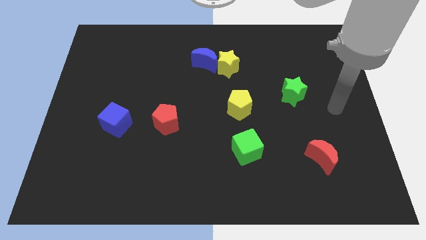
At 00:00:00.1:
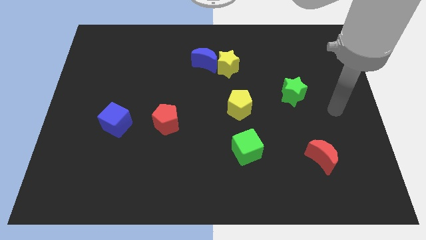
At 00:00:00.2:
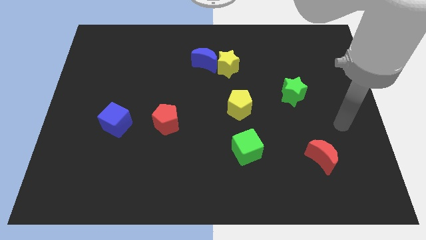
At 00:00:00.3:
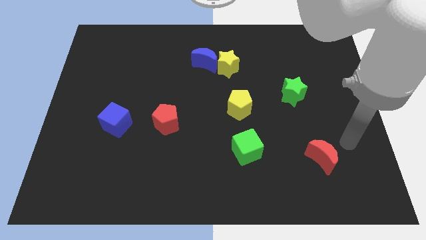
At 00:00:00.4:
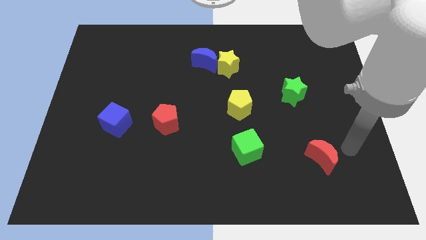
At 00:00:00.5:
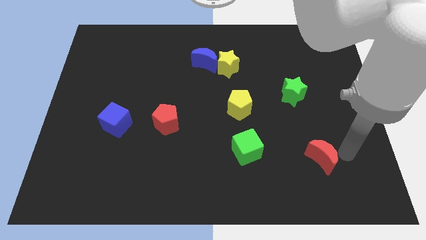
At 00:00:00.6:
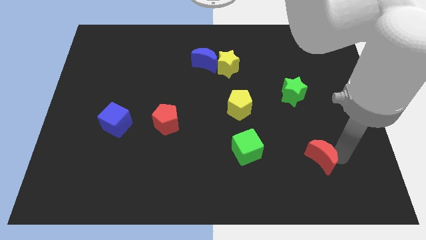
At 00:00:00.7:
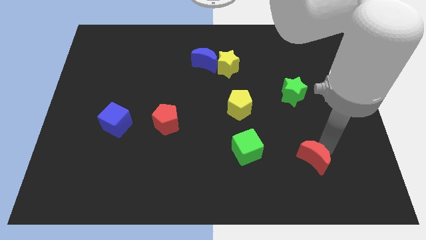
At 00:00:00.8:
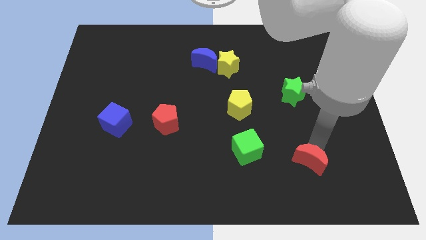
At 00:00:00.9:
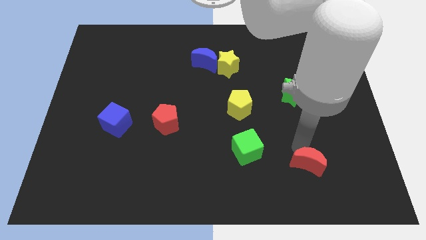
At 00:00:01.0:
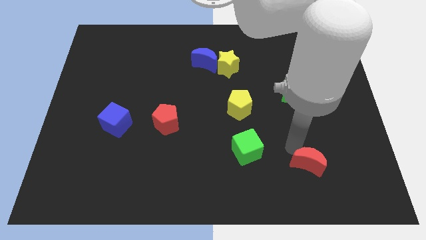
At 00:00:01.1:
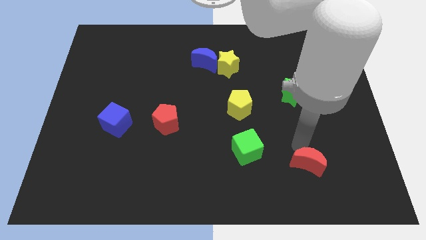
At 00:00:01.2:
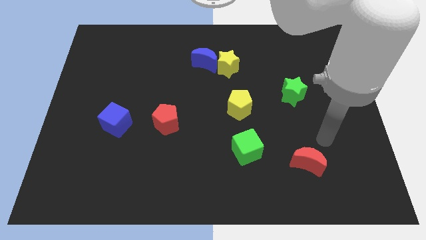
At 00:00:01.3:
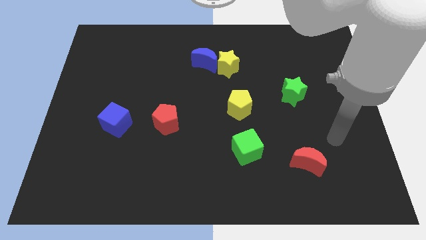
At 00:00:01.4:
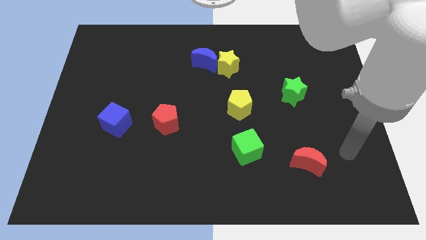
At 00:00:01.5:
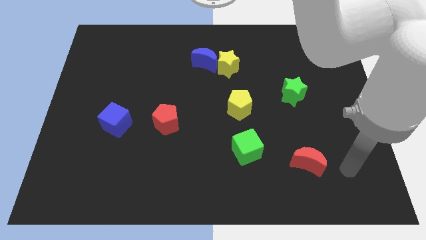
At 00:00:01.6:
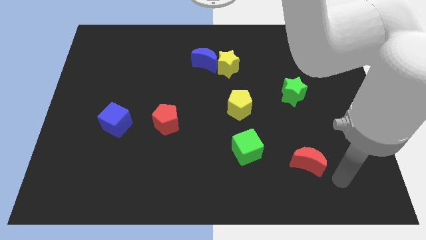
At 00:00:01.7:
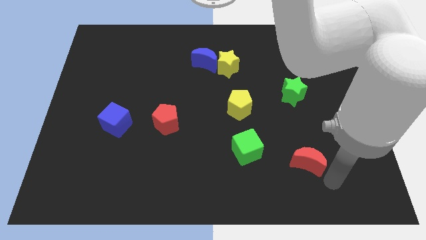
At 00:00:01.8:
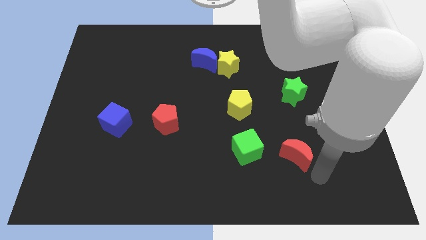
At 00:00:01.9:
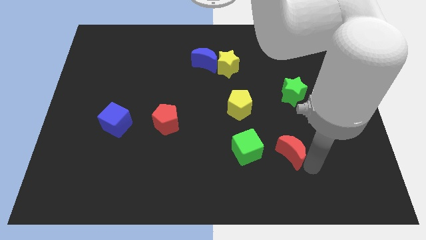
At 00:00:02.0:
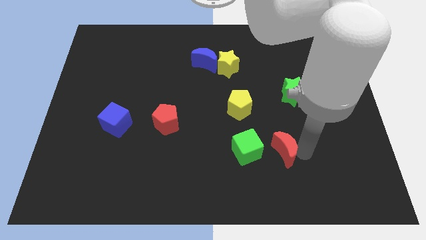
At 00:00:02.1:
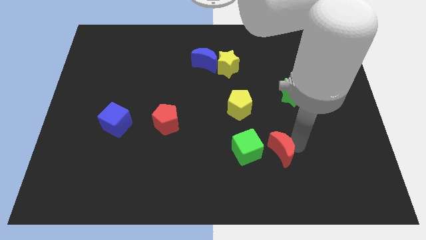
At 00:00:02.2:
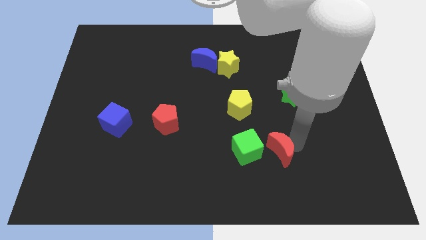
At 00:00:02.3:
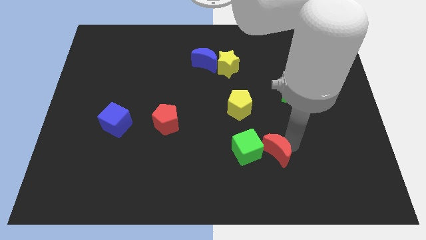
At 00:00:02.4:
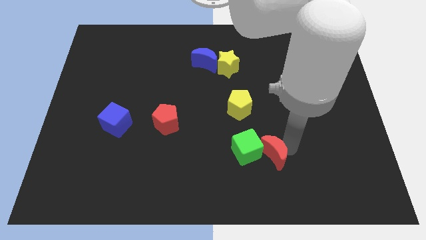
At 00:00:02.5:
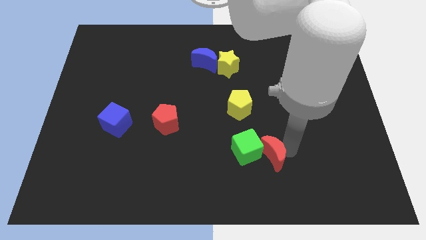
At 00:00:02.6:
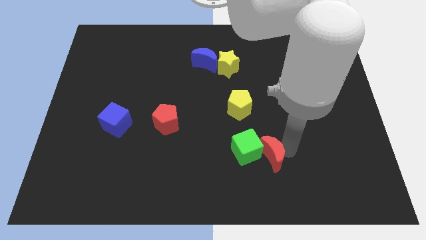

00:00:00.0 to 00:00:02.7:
slide the red moon next to the green cube

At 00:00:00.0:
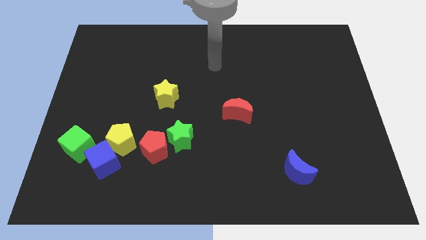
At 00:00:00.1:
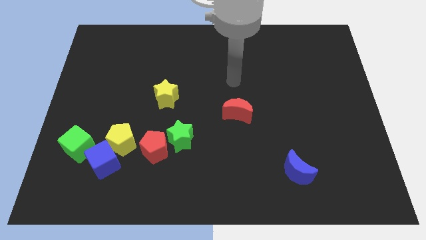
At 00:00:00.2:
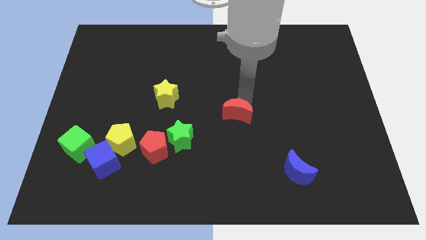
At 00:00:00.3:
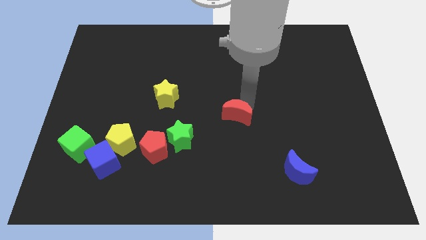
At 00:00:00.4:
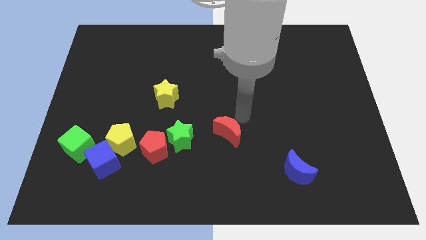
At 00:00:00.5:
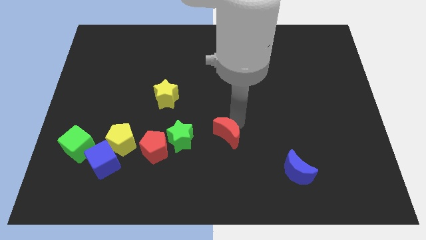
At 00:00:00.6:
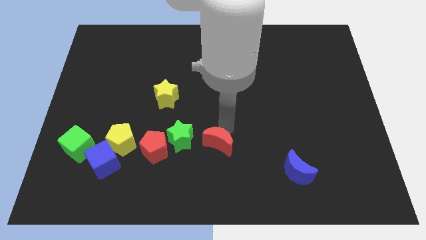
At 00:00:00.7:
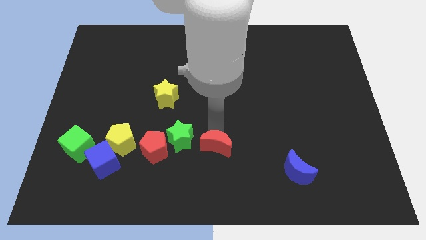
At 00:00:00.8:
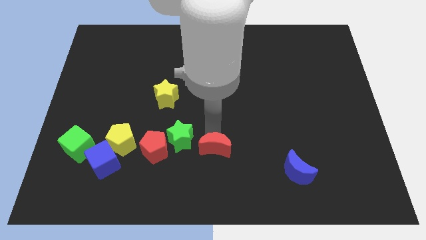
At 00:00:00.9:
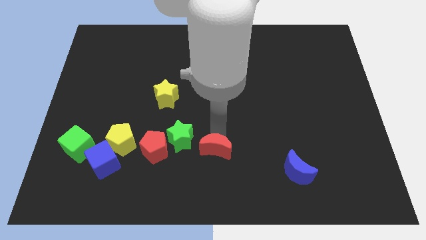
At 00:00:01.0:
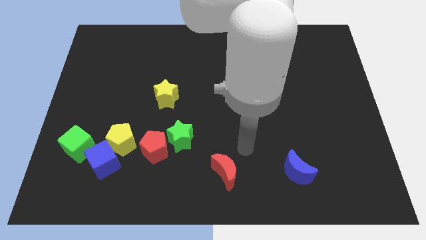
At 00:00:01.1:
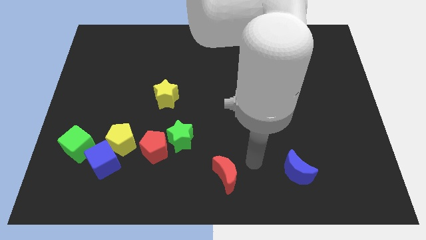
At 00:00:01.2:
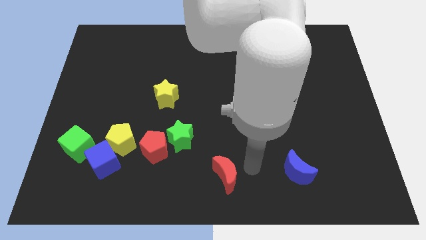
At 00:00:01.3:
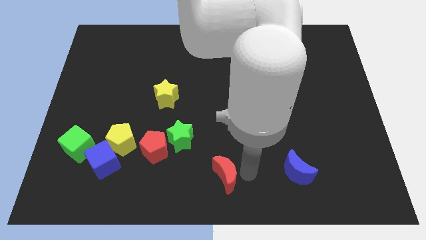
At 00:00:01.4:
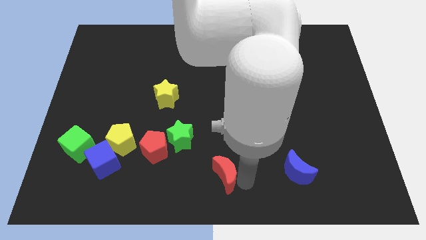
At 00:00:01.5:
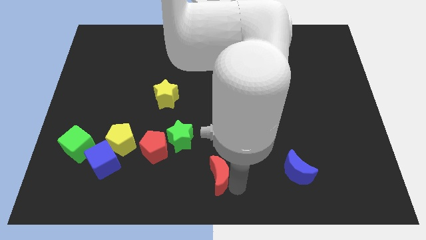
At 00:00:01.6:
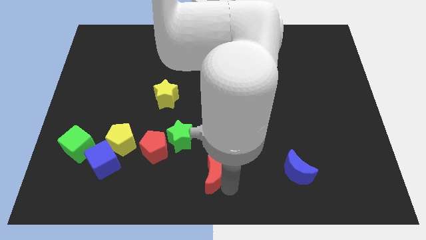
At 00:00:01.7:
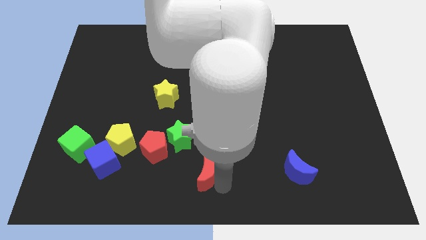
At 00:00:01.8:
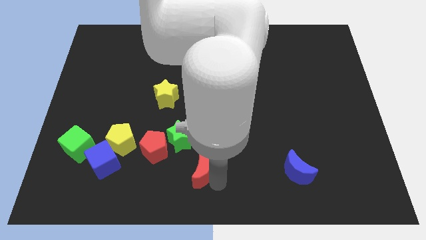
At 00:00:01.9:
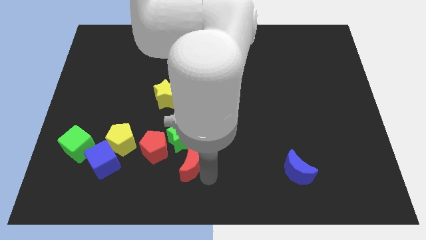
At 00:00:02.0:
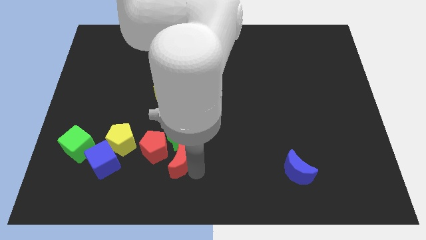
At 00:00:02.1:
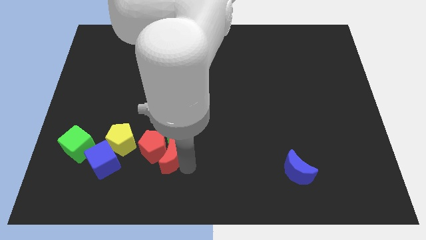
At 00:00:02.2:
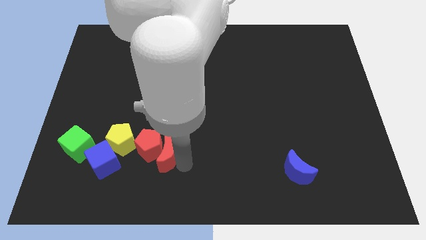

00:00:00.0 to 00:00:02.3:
move the red moon next to the green star

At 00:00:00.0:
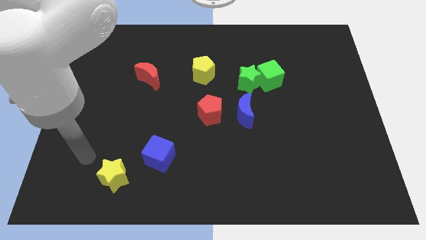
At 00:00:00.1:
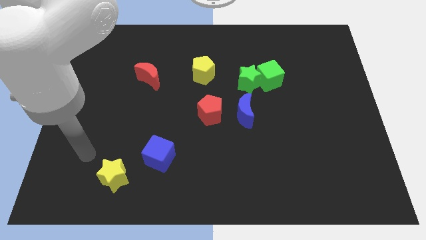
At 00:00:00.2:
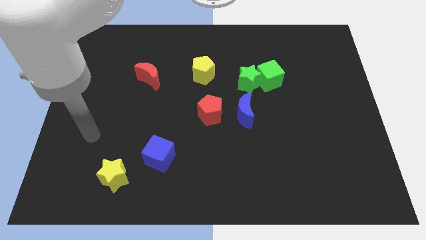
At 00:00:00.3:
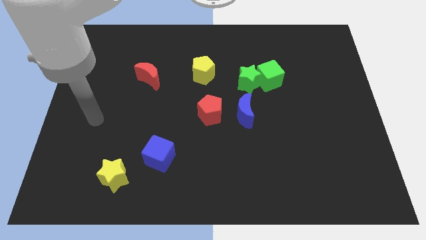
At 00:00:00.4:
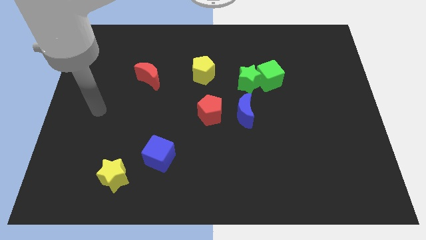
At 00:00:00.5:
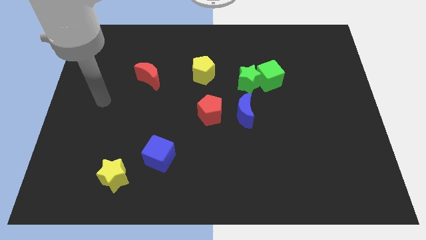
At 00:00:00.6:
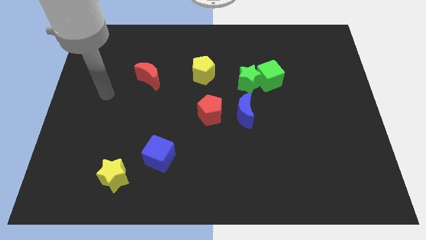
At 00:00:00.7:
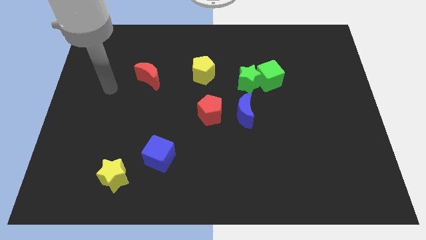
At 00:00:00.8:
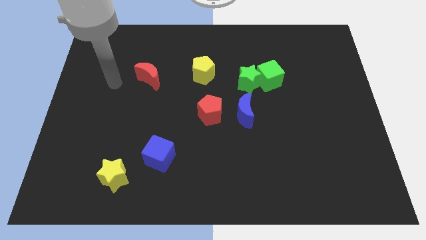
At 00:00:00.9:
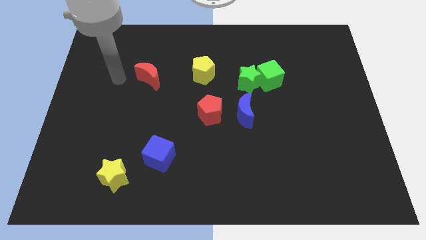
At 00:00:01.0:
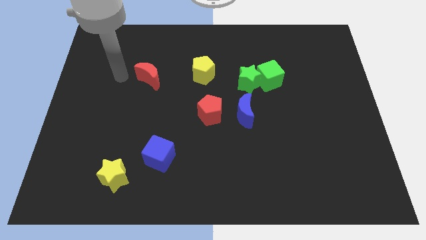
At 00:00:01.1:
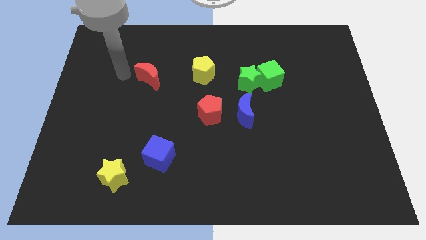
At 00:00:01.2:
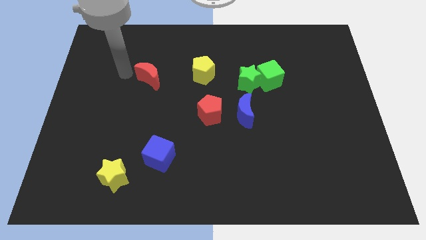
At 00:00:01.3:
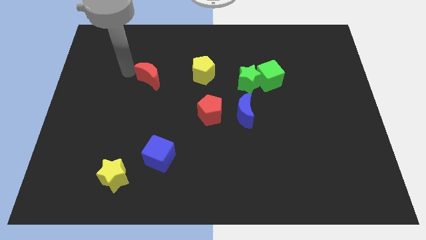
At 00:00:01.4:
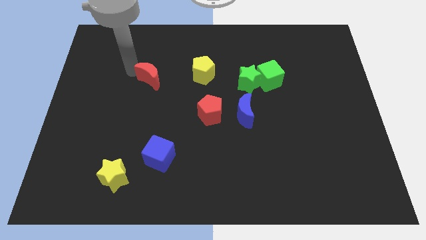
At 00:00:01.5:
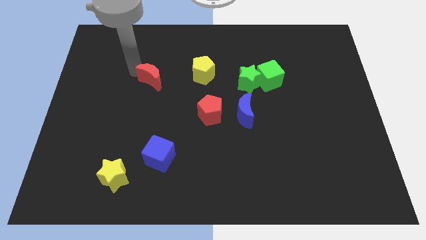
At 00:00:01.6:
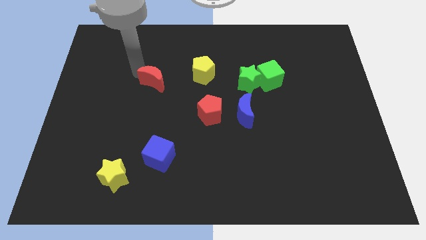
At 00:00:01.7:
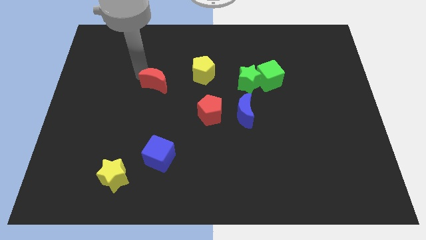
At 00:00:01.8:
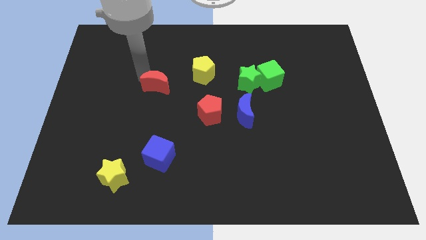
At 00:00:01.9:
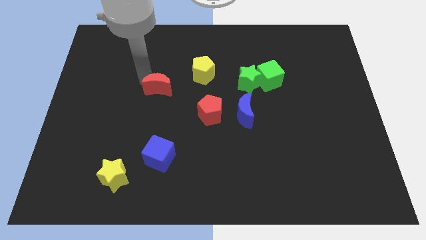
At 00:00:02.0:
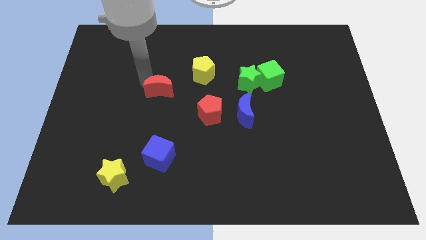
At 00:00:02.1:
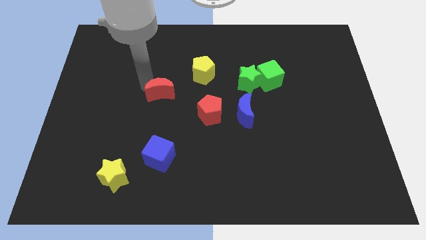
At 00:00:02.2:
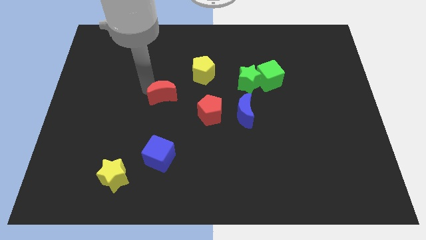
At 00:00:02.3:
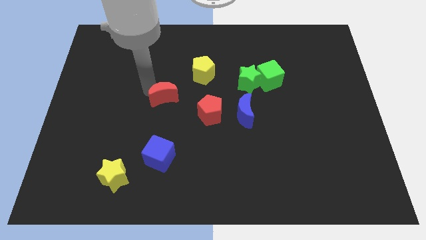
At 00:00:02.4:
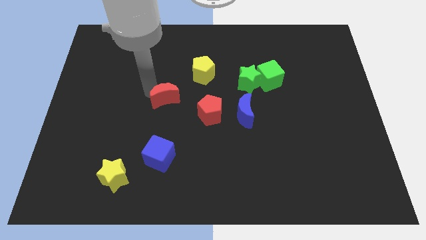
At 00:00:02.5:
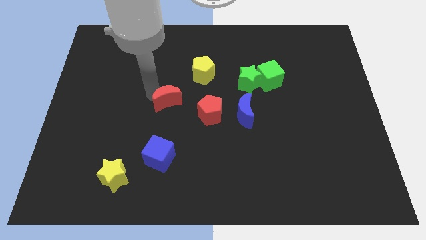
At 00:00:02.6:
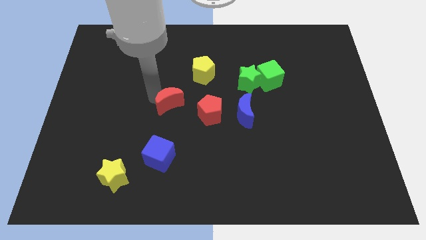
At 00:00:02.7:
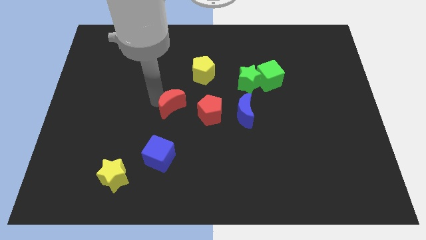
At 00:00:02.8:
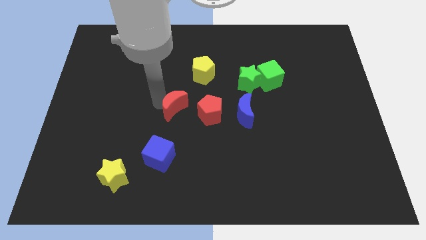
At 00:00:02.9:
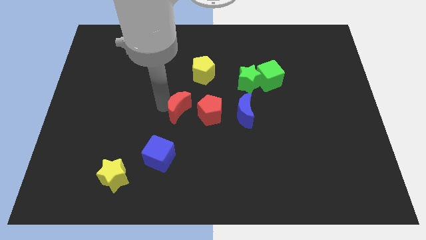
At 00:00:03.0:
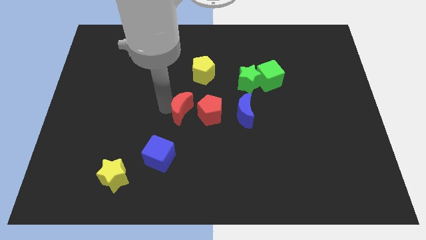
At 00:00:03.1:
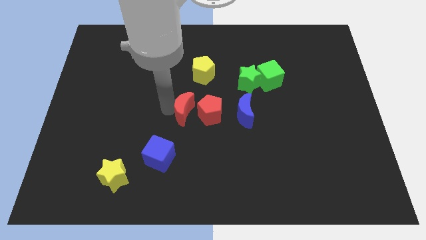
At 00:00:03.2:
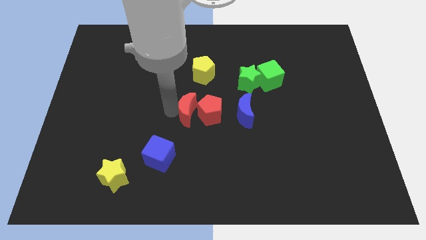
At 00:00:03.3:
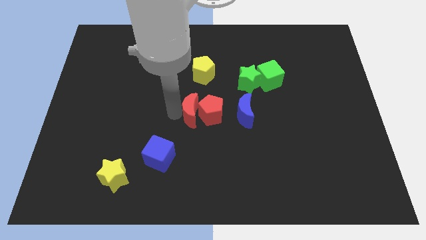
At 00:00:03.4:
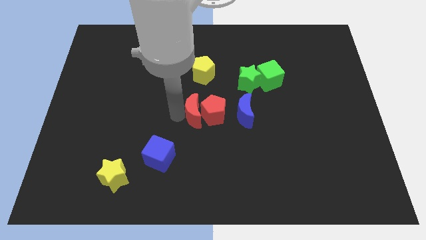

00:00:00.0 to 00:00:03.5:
slide the red moon towards the red pentagon
